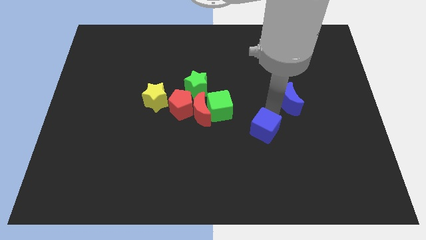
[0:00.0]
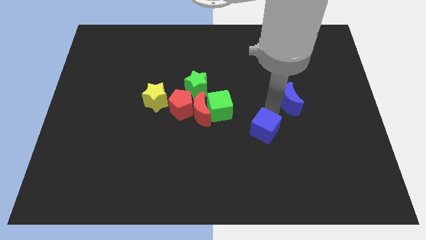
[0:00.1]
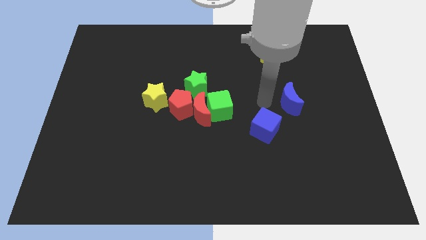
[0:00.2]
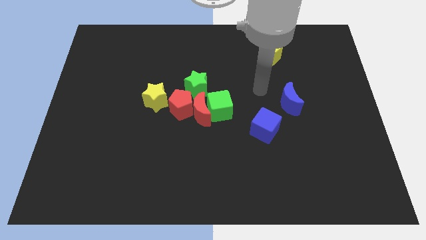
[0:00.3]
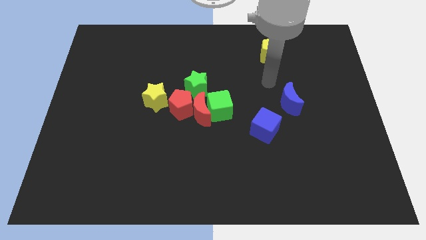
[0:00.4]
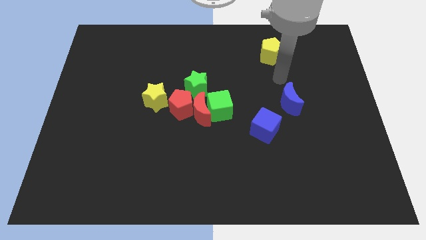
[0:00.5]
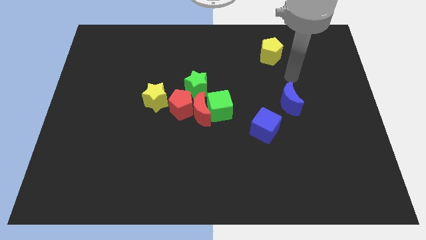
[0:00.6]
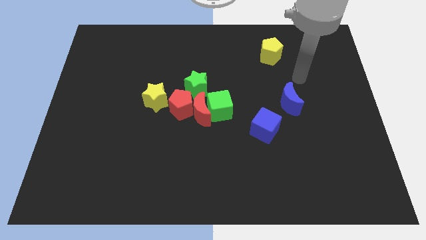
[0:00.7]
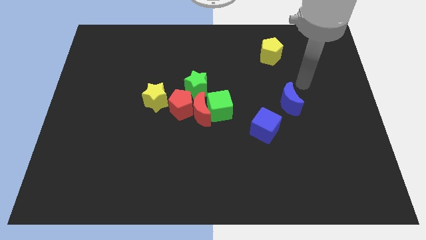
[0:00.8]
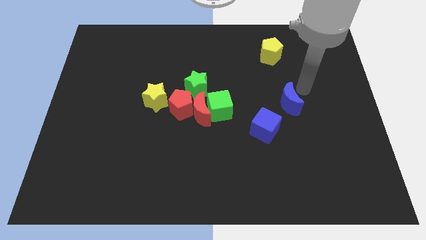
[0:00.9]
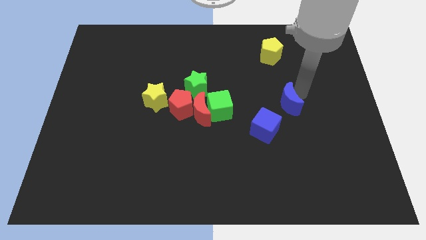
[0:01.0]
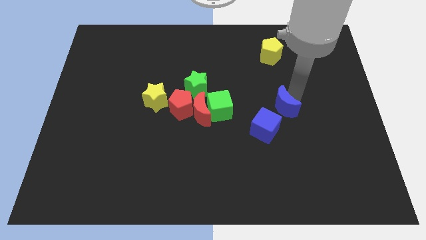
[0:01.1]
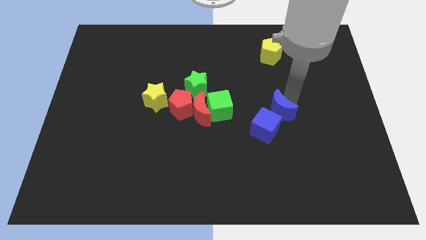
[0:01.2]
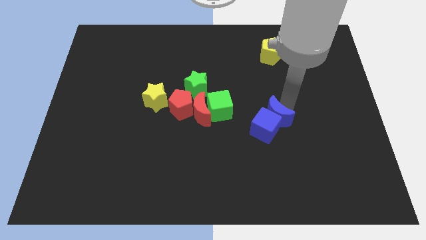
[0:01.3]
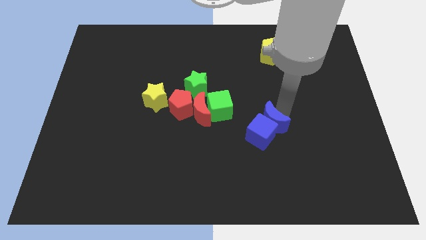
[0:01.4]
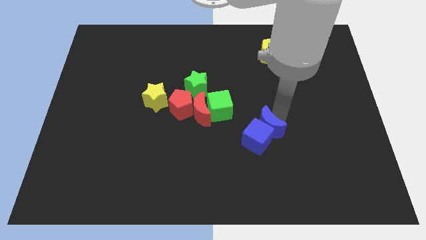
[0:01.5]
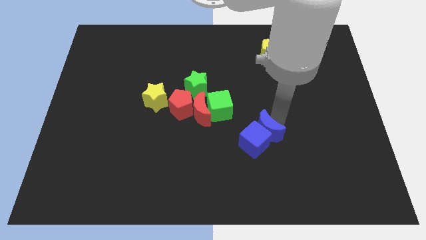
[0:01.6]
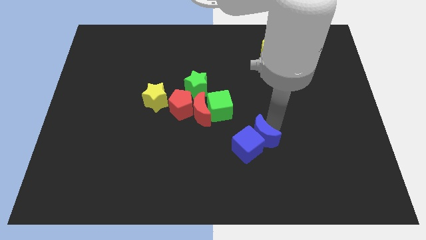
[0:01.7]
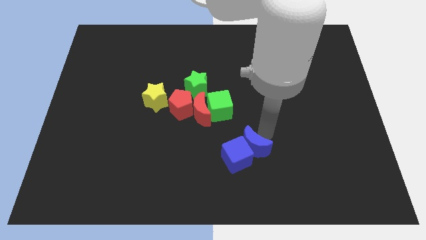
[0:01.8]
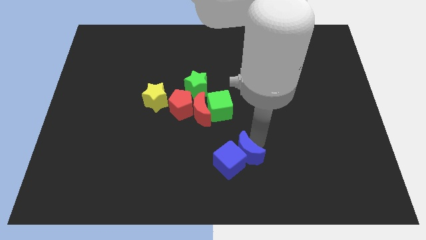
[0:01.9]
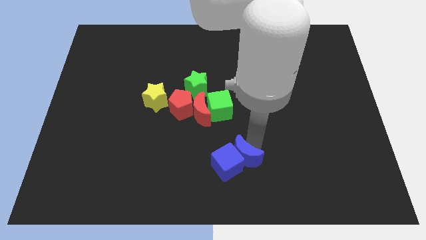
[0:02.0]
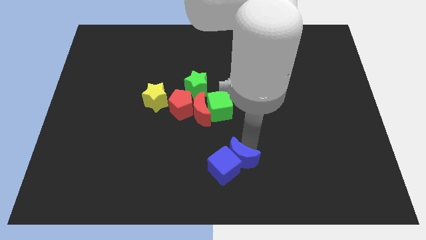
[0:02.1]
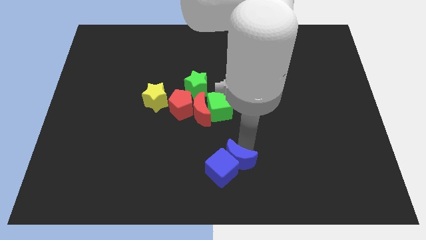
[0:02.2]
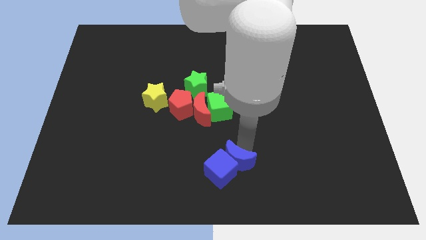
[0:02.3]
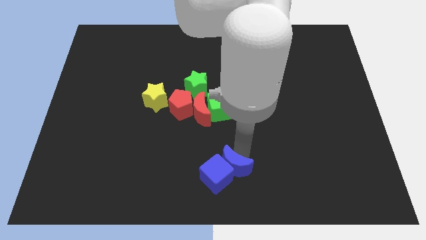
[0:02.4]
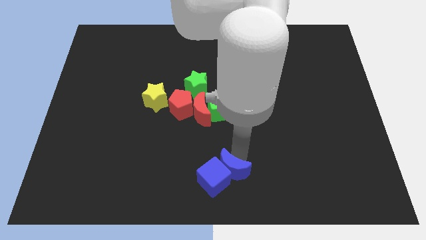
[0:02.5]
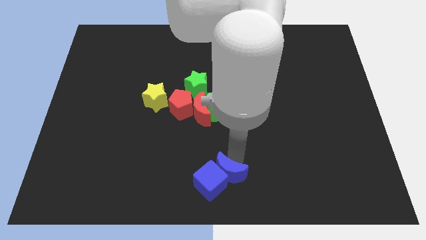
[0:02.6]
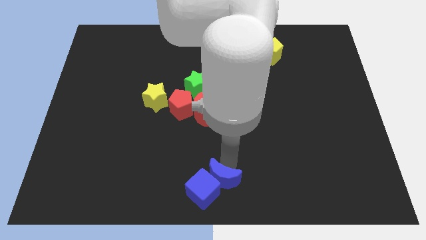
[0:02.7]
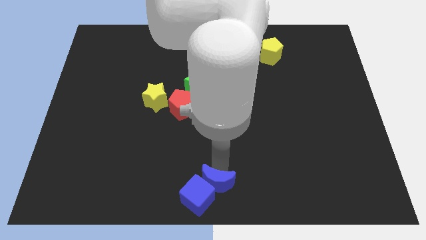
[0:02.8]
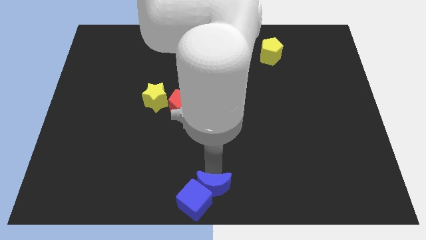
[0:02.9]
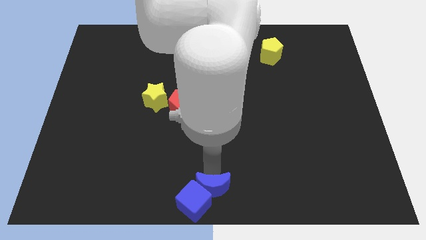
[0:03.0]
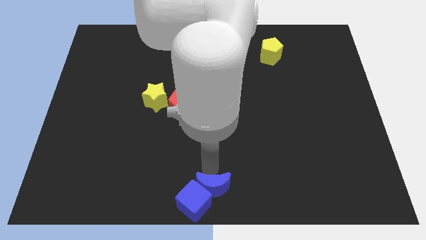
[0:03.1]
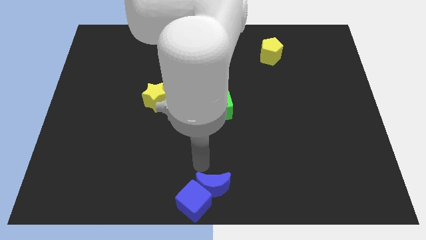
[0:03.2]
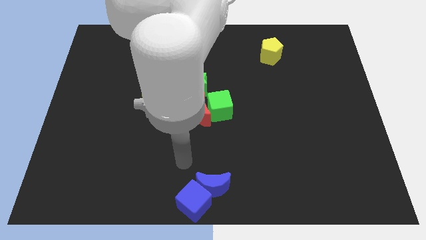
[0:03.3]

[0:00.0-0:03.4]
place the blue blocks at the bottom center of the board

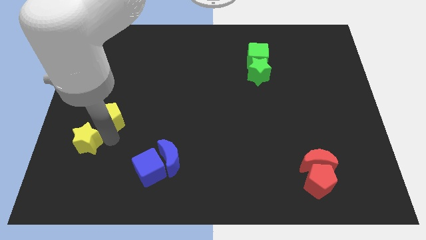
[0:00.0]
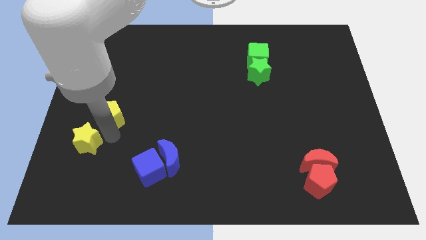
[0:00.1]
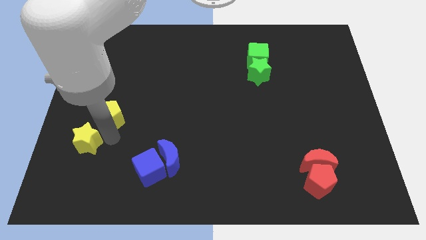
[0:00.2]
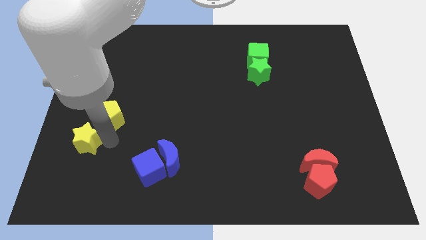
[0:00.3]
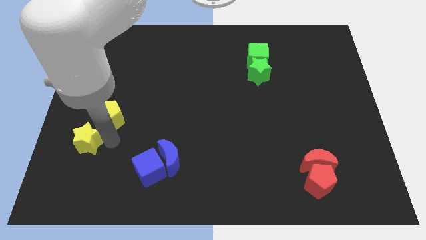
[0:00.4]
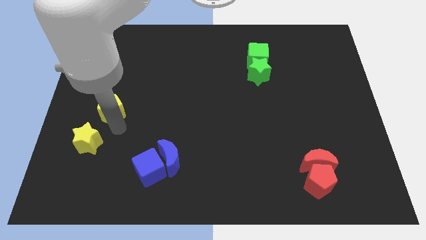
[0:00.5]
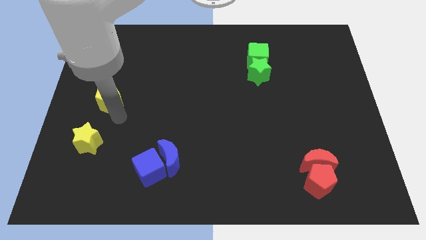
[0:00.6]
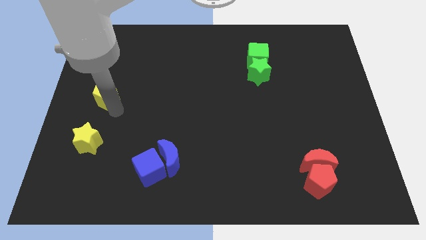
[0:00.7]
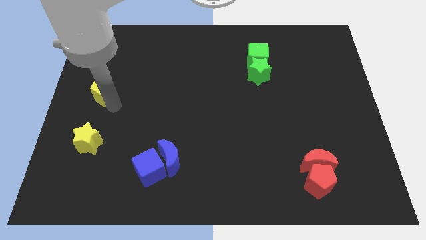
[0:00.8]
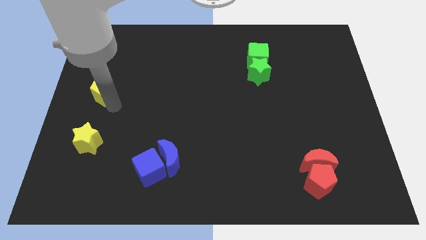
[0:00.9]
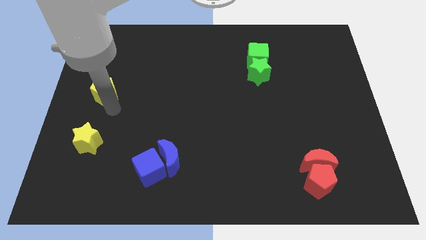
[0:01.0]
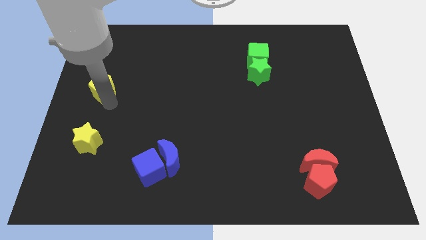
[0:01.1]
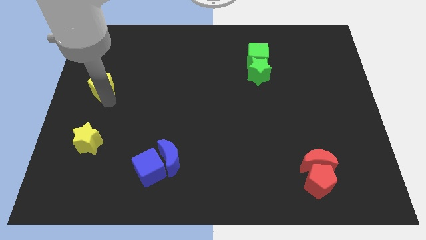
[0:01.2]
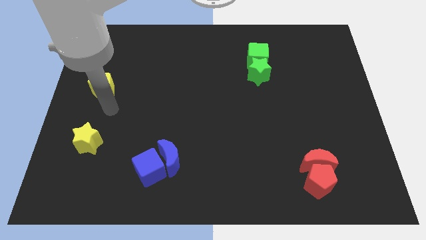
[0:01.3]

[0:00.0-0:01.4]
separate the yellow pentagon from the yellow star

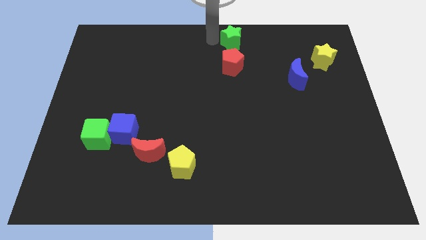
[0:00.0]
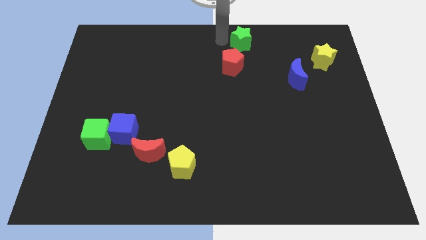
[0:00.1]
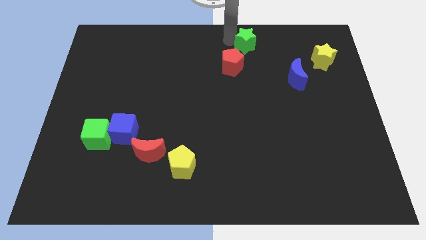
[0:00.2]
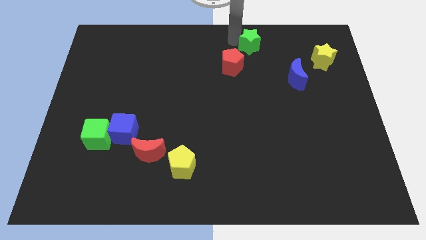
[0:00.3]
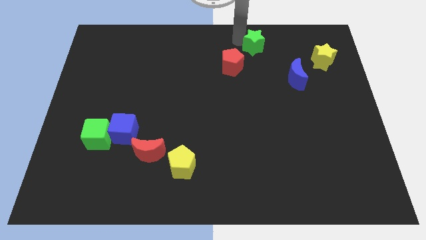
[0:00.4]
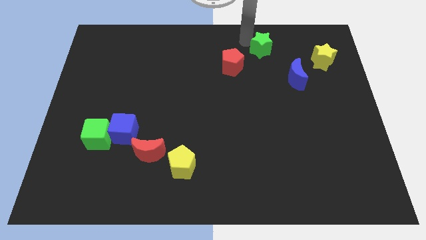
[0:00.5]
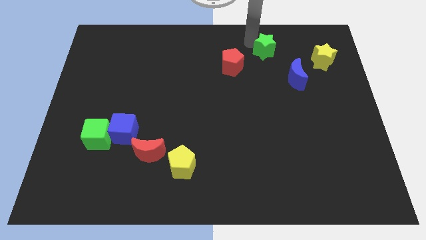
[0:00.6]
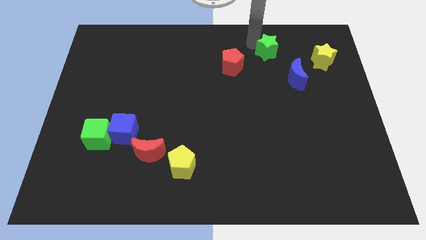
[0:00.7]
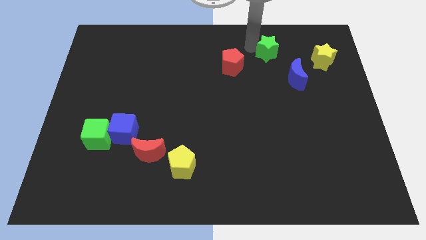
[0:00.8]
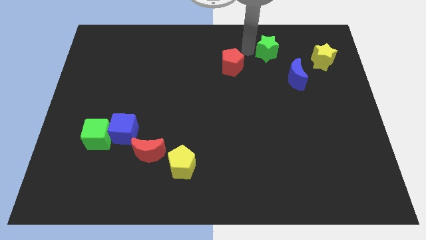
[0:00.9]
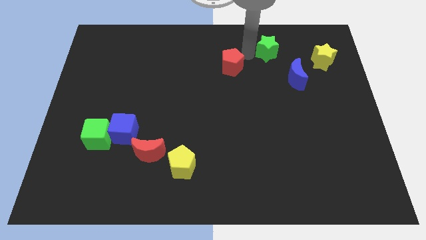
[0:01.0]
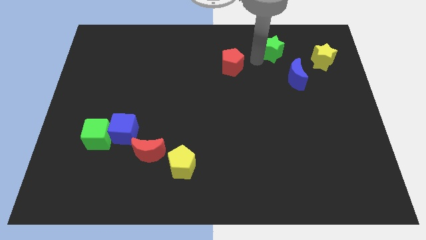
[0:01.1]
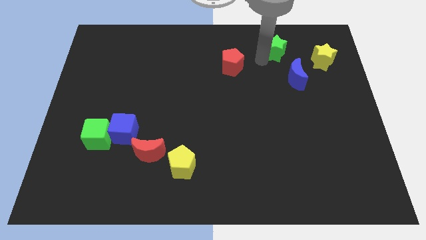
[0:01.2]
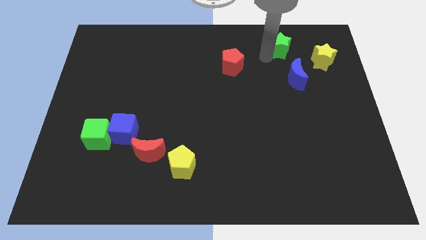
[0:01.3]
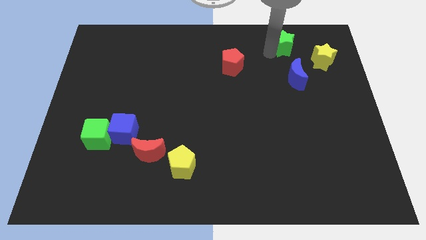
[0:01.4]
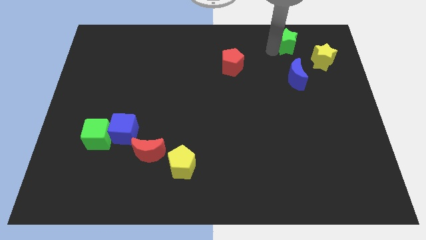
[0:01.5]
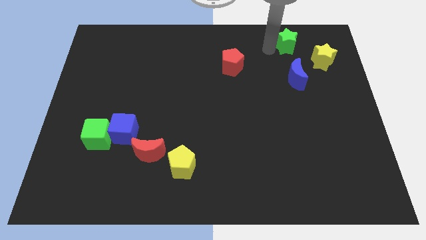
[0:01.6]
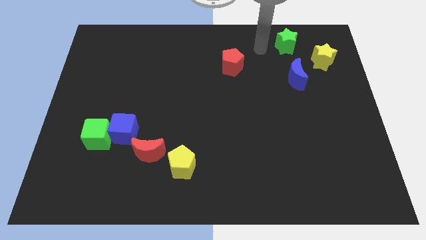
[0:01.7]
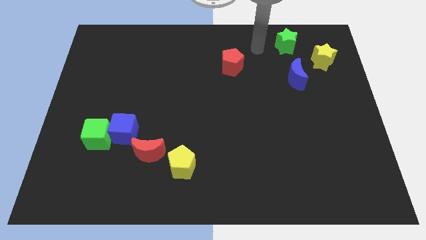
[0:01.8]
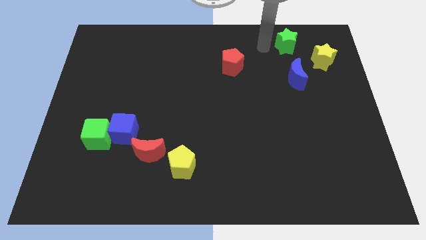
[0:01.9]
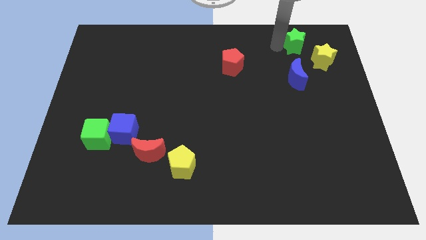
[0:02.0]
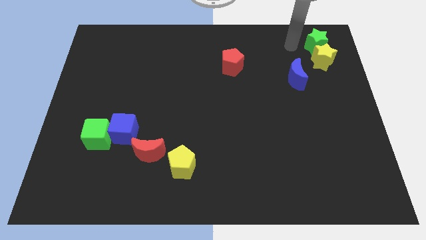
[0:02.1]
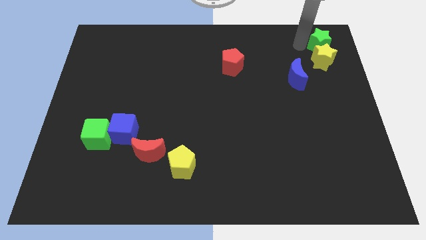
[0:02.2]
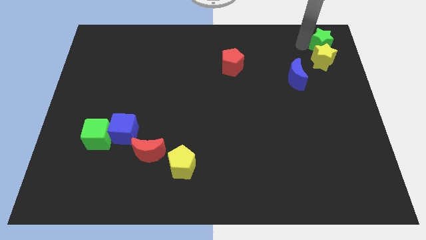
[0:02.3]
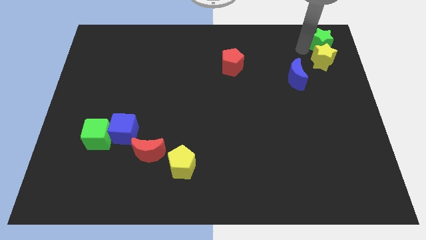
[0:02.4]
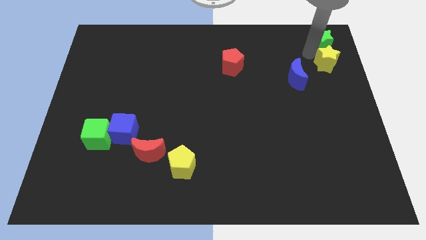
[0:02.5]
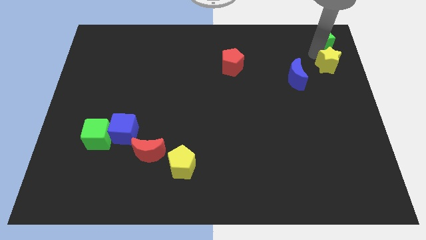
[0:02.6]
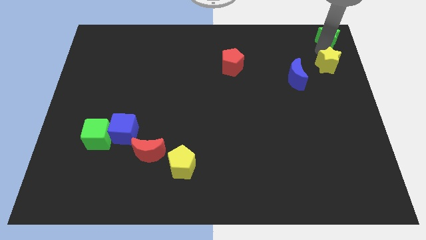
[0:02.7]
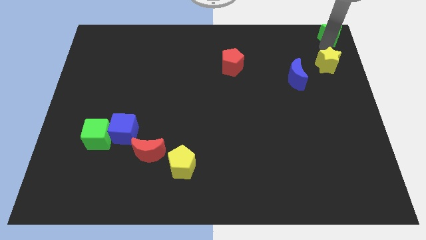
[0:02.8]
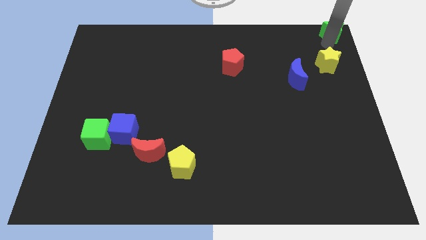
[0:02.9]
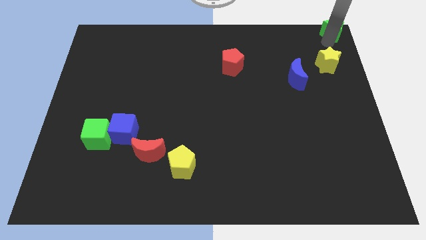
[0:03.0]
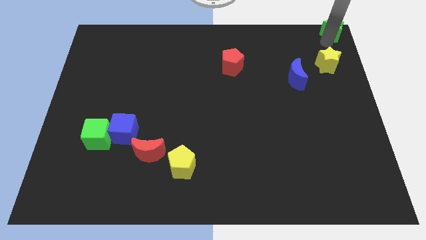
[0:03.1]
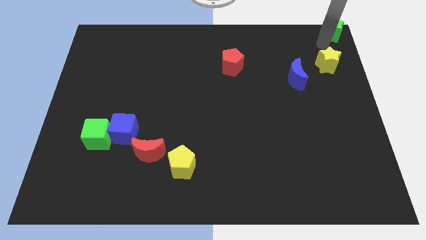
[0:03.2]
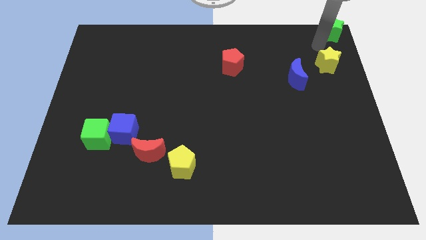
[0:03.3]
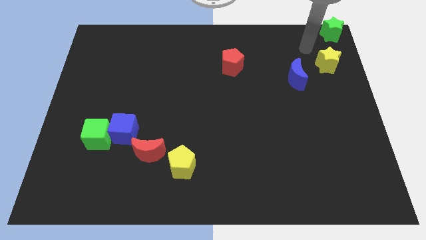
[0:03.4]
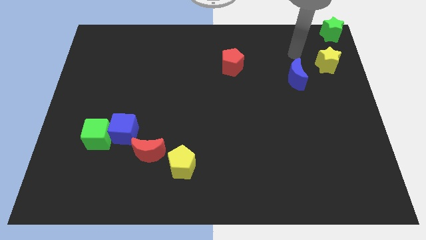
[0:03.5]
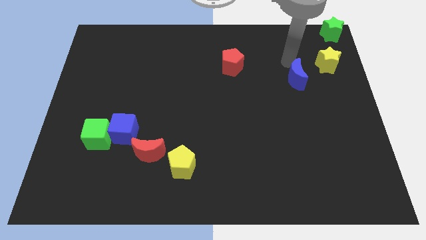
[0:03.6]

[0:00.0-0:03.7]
push the green star top right corner to the board

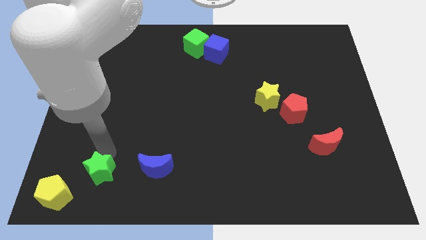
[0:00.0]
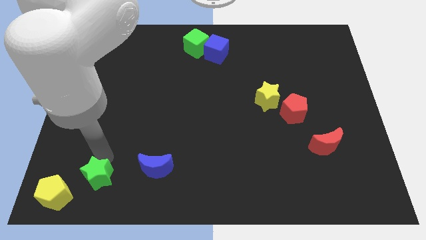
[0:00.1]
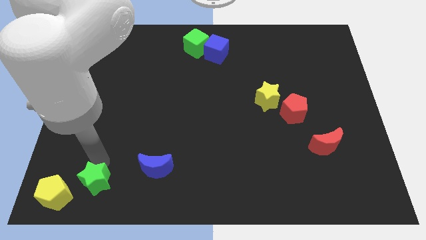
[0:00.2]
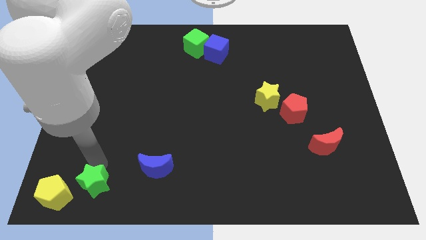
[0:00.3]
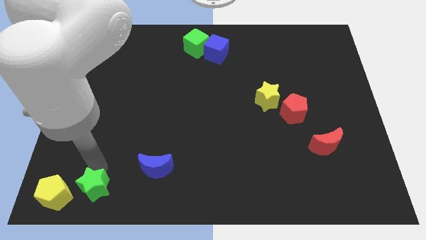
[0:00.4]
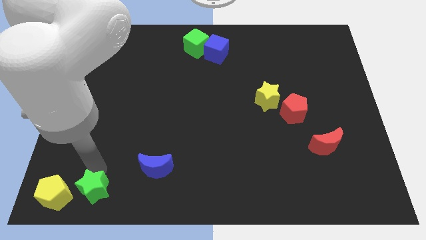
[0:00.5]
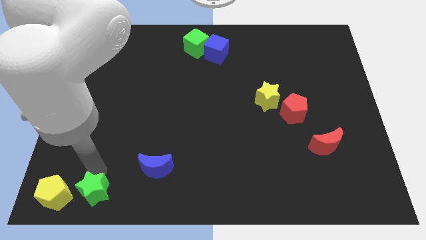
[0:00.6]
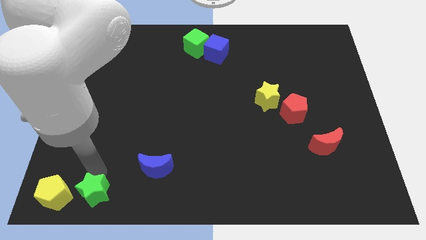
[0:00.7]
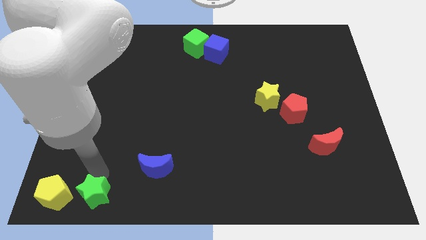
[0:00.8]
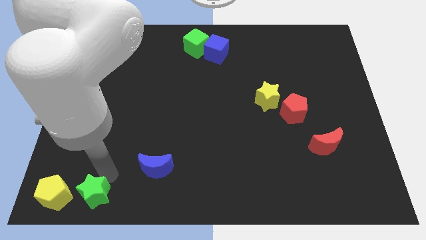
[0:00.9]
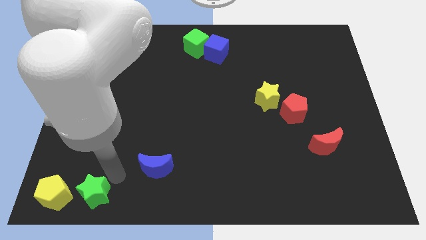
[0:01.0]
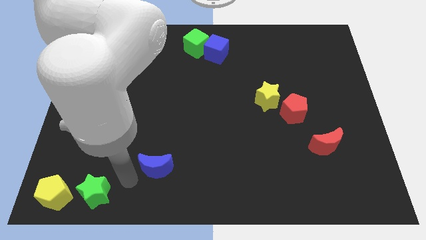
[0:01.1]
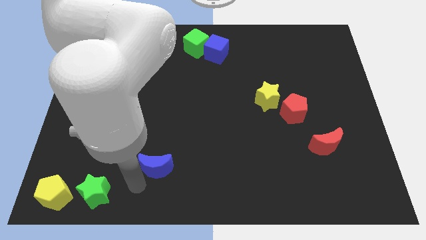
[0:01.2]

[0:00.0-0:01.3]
place green star on right side of yellow pentagon
